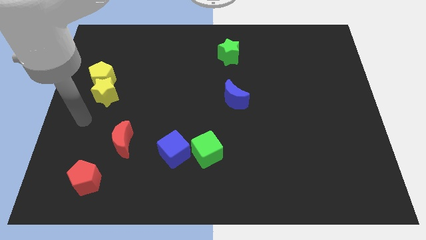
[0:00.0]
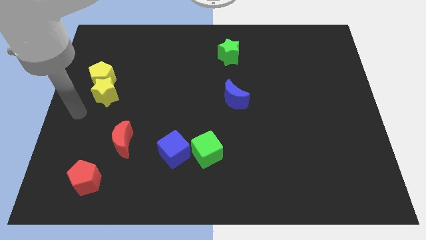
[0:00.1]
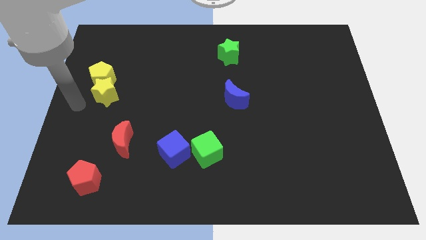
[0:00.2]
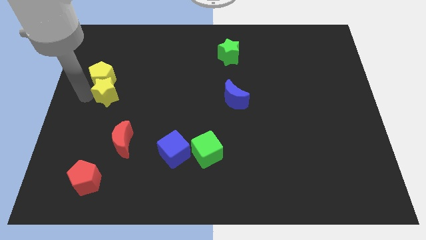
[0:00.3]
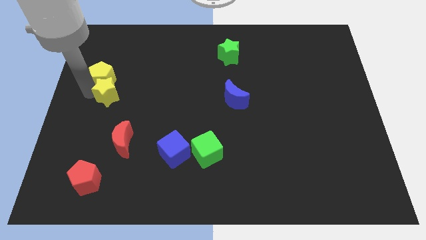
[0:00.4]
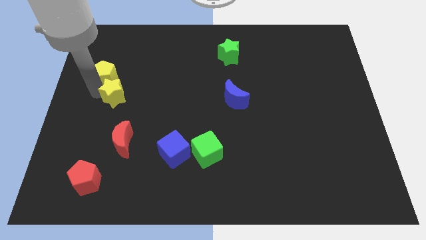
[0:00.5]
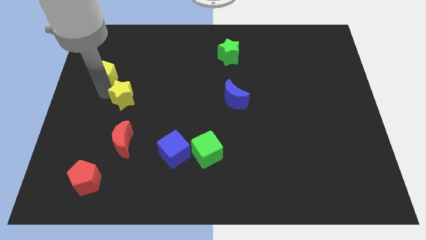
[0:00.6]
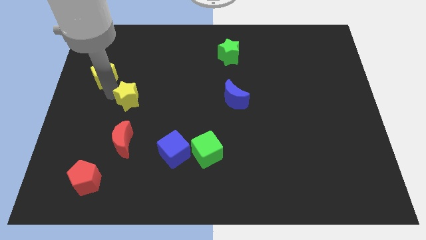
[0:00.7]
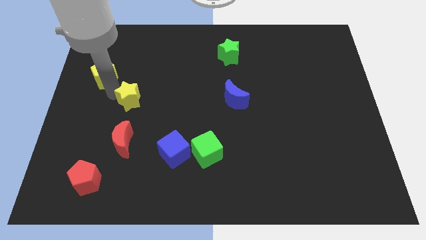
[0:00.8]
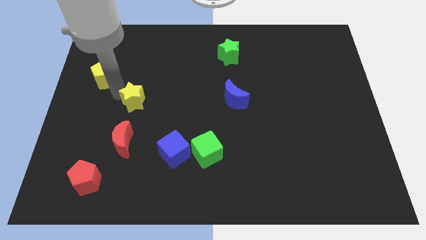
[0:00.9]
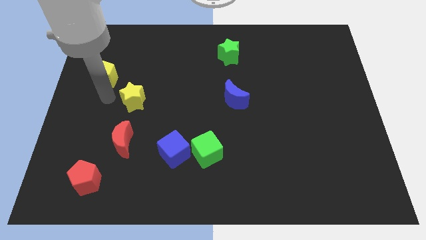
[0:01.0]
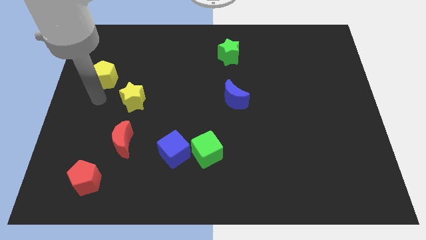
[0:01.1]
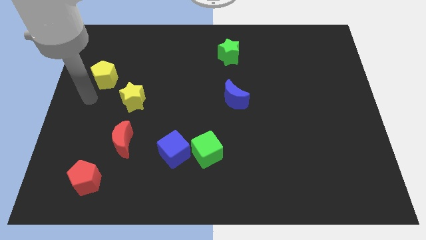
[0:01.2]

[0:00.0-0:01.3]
separate the yellow star from the yellow pentagon

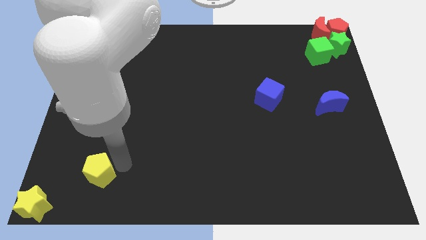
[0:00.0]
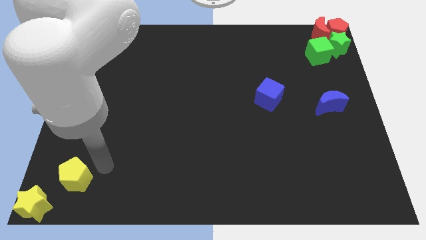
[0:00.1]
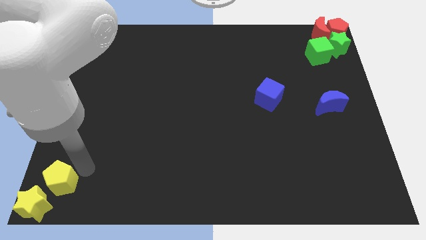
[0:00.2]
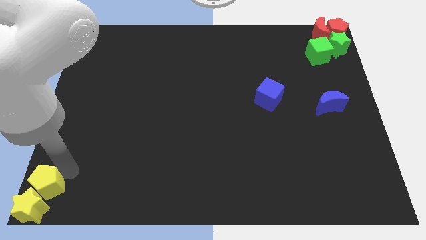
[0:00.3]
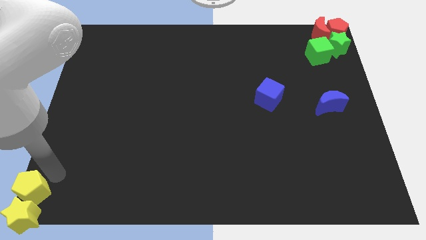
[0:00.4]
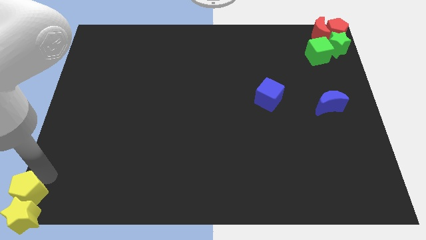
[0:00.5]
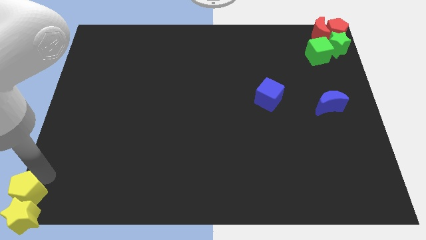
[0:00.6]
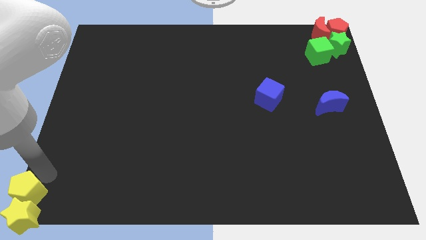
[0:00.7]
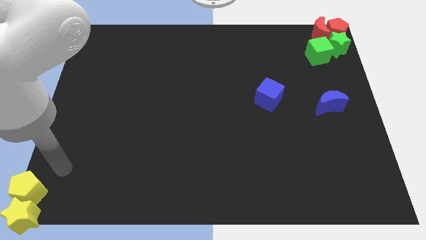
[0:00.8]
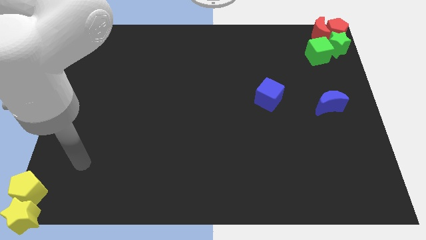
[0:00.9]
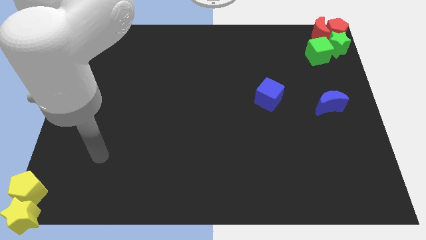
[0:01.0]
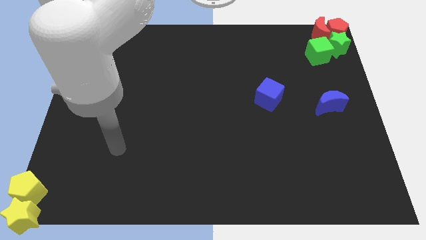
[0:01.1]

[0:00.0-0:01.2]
push the yellow pentagon into the yellow star

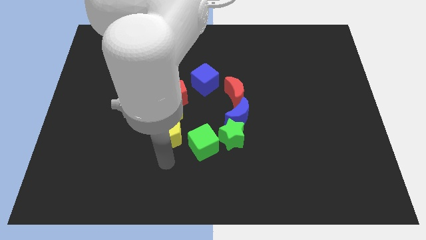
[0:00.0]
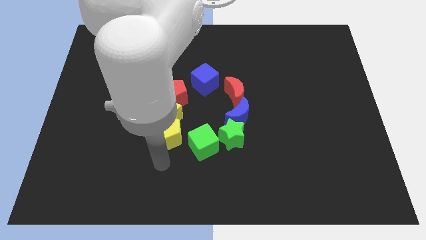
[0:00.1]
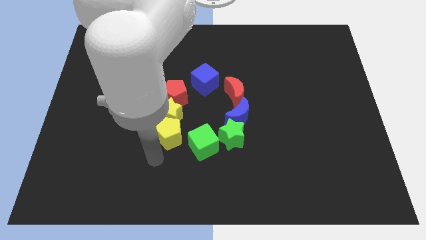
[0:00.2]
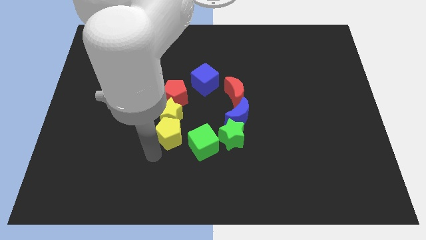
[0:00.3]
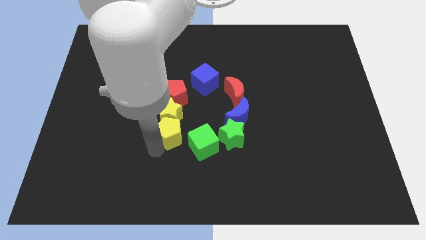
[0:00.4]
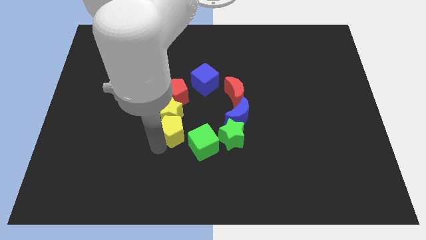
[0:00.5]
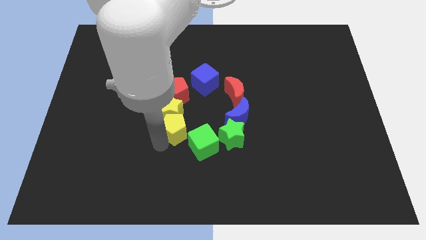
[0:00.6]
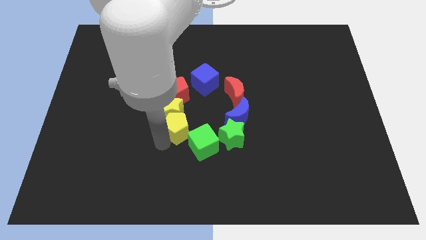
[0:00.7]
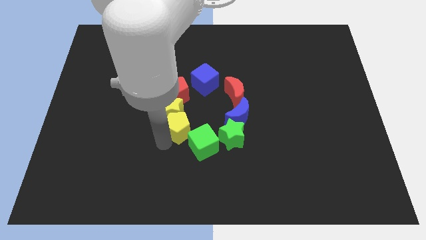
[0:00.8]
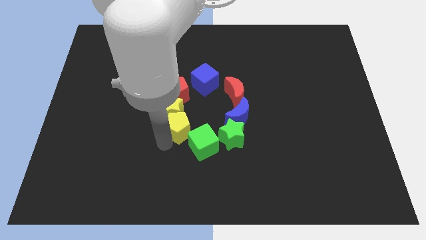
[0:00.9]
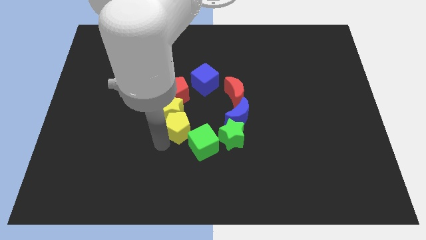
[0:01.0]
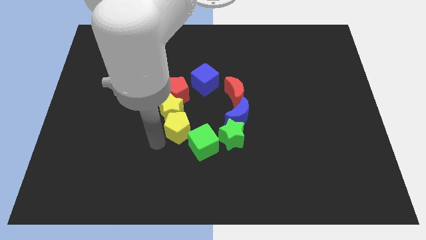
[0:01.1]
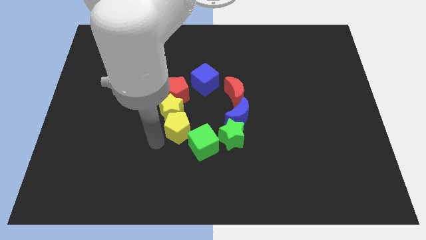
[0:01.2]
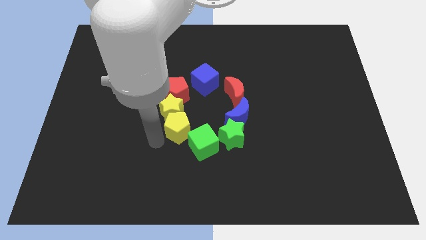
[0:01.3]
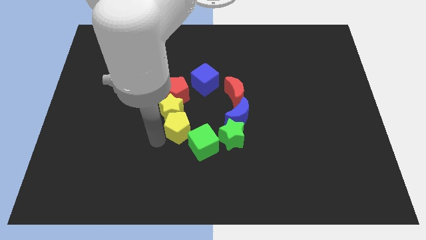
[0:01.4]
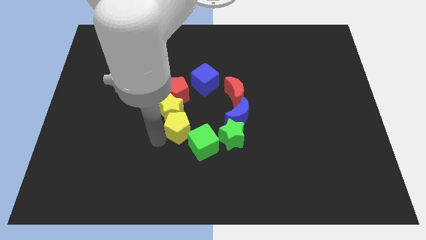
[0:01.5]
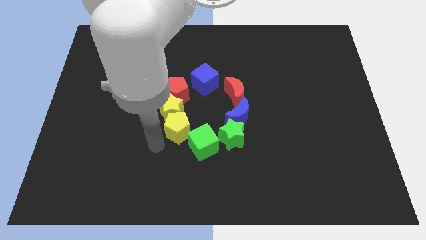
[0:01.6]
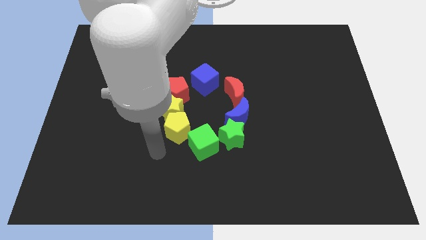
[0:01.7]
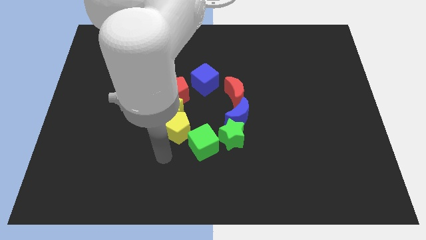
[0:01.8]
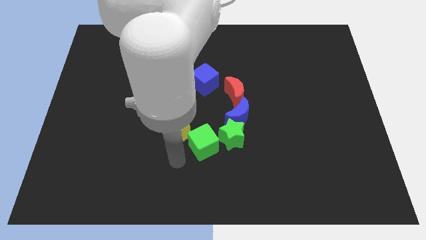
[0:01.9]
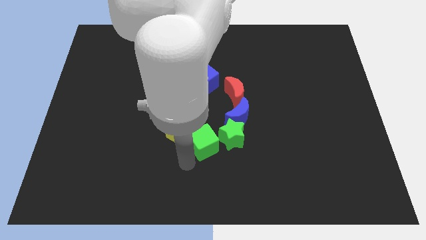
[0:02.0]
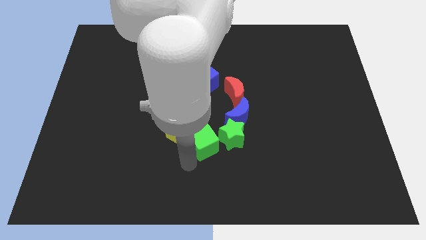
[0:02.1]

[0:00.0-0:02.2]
make a circle with group of blocks

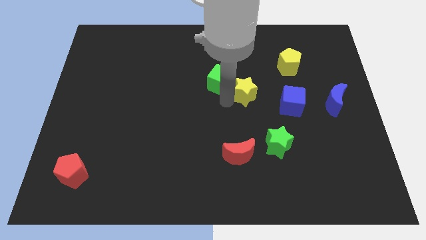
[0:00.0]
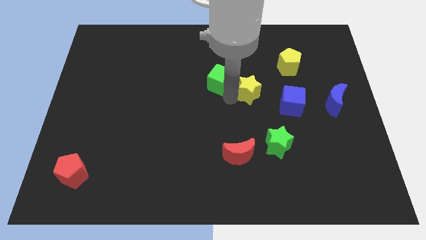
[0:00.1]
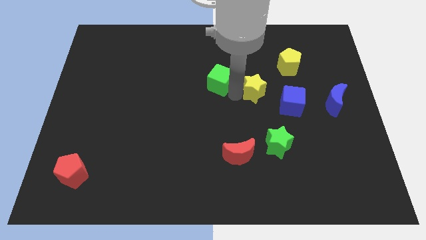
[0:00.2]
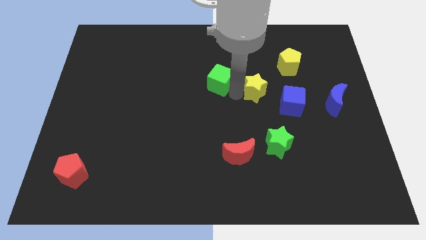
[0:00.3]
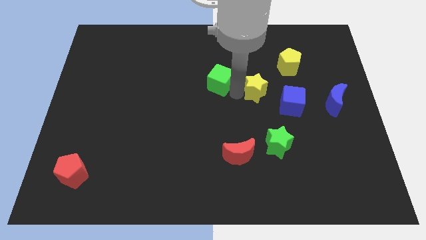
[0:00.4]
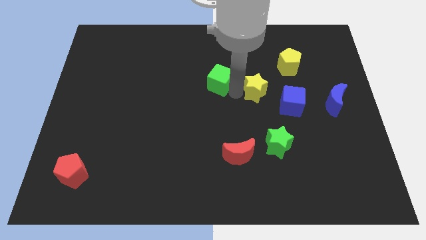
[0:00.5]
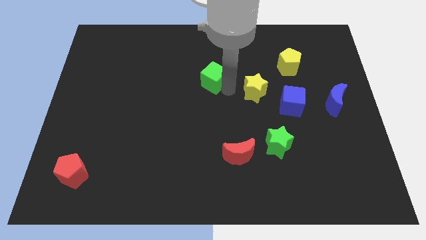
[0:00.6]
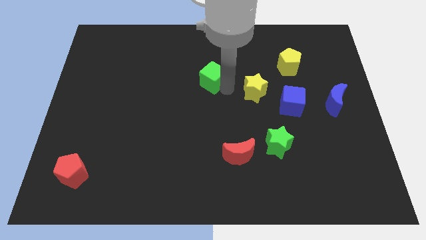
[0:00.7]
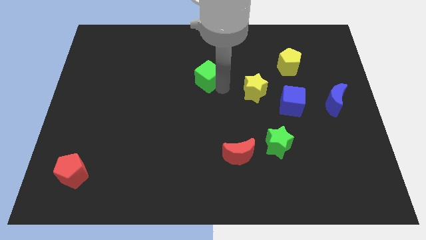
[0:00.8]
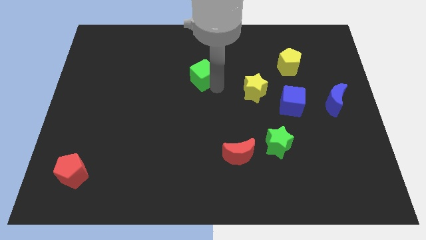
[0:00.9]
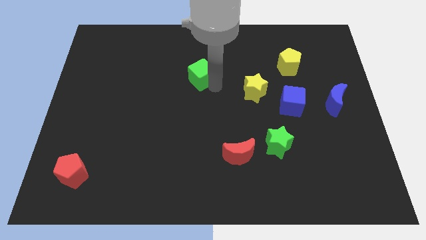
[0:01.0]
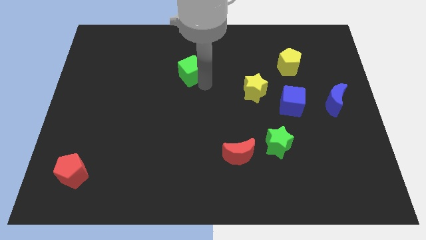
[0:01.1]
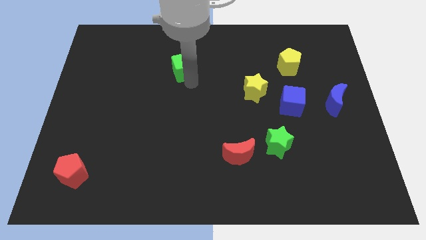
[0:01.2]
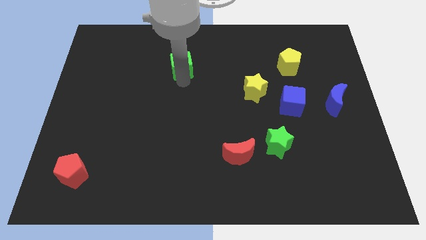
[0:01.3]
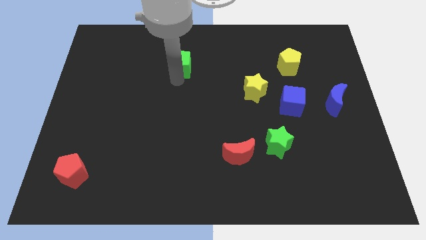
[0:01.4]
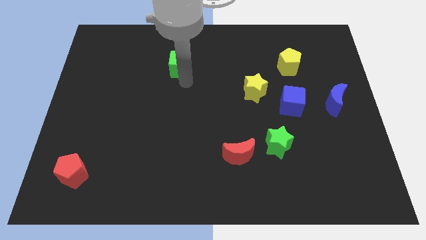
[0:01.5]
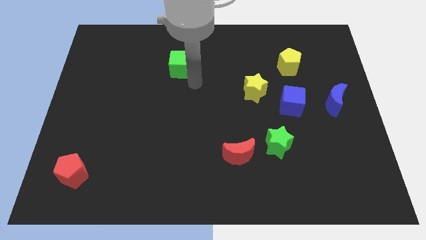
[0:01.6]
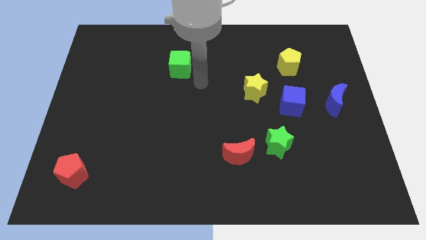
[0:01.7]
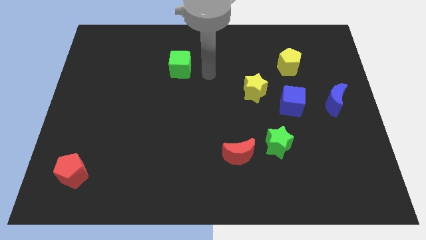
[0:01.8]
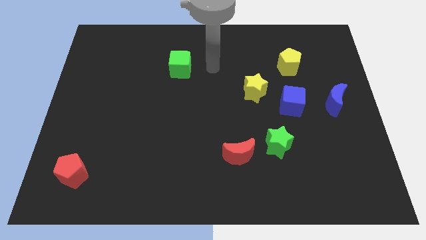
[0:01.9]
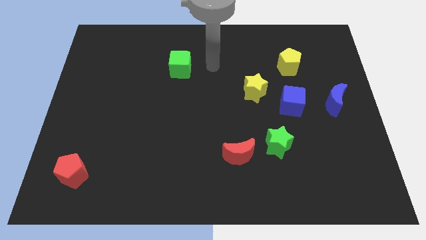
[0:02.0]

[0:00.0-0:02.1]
separate green cube from yellow star

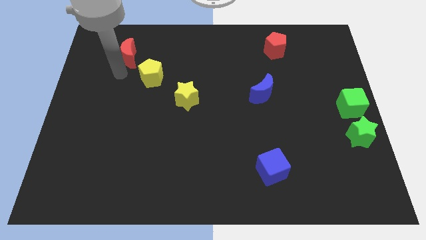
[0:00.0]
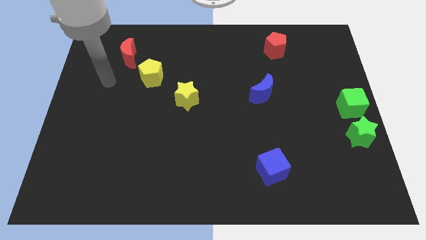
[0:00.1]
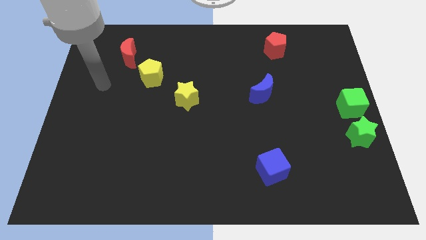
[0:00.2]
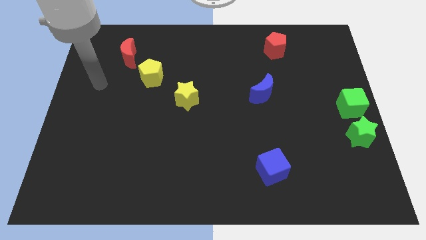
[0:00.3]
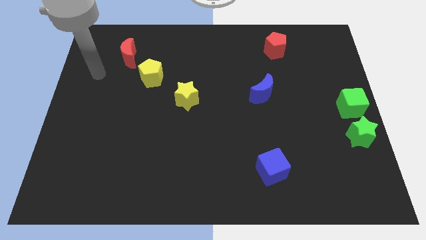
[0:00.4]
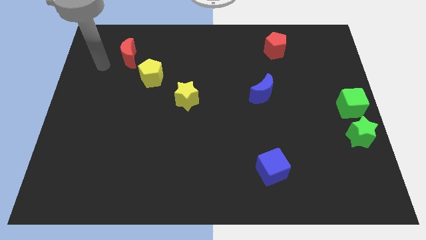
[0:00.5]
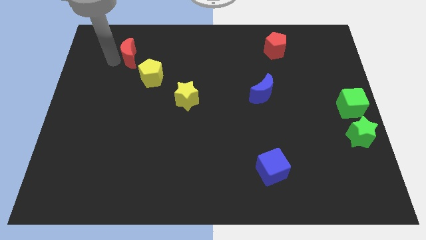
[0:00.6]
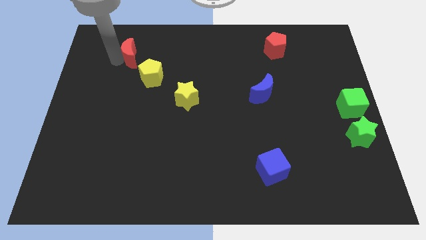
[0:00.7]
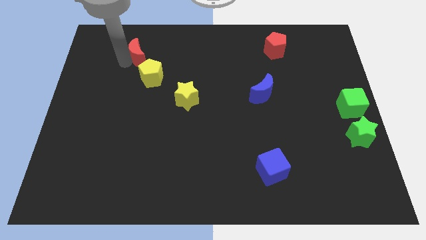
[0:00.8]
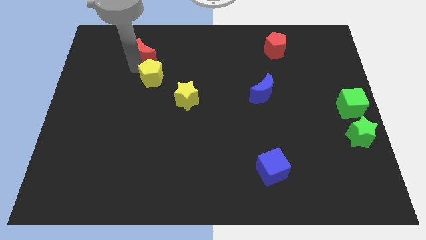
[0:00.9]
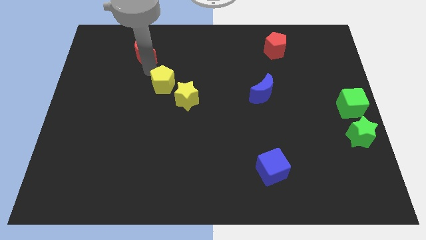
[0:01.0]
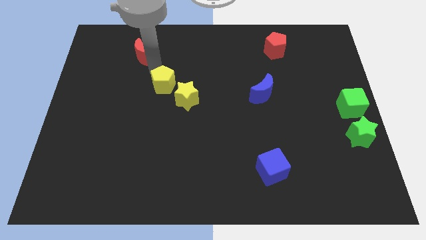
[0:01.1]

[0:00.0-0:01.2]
place your arm in between the red moon and yellow pentagon

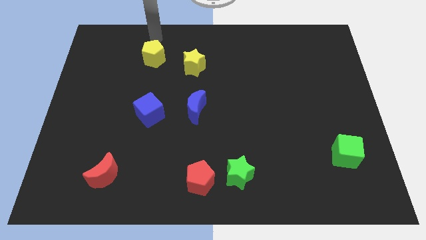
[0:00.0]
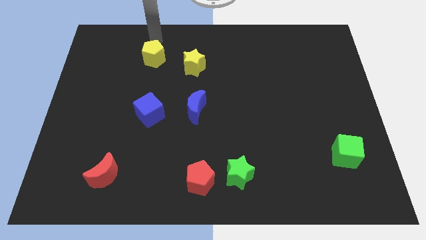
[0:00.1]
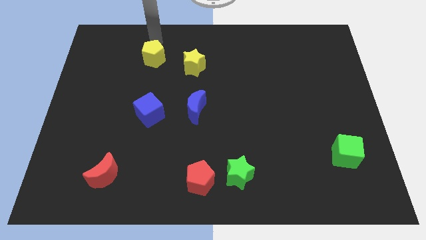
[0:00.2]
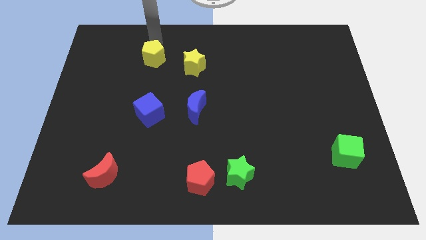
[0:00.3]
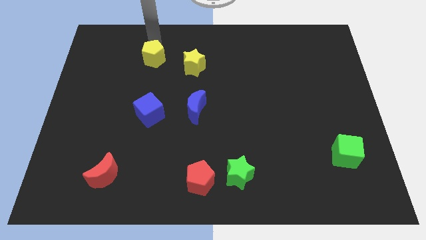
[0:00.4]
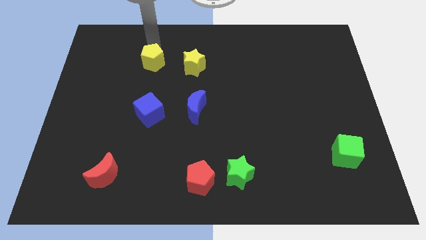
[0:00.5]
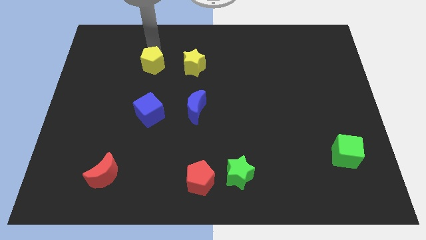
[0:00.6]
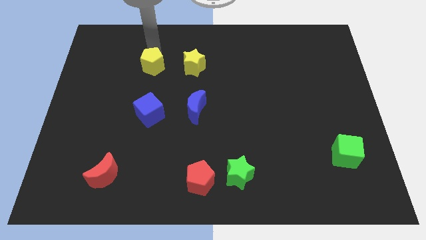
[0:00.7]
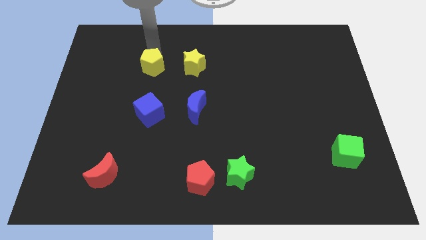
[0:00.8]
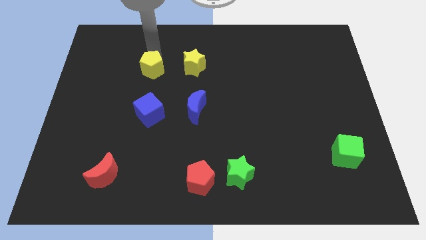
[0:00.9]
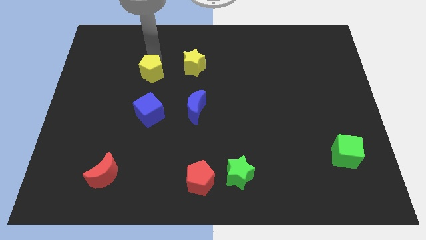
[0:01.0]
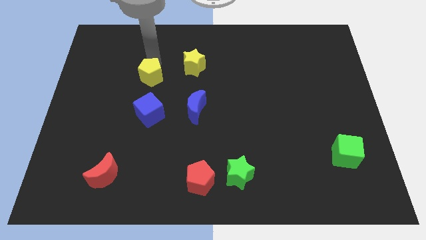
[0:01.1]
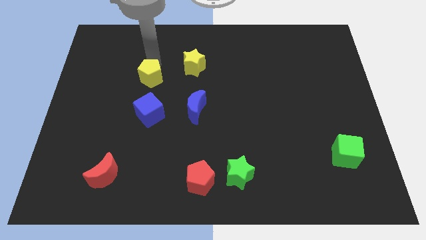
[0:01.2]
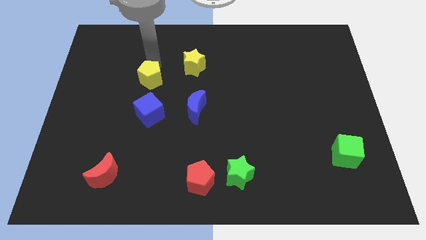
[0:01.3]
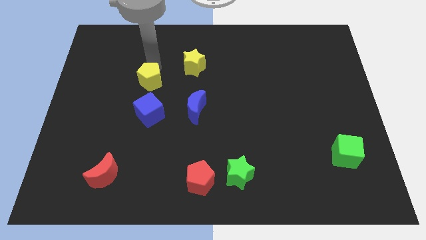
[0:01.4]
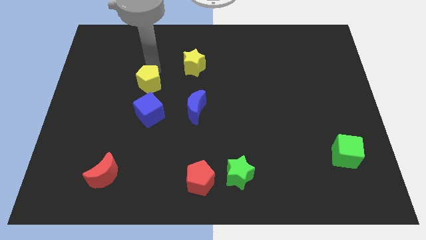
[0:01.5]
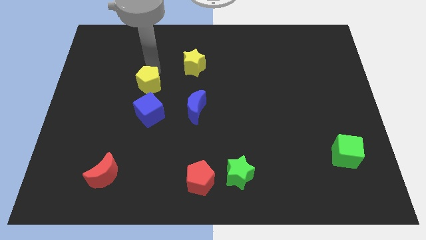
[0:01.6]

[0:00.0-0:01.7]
push the yellow pentagon slightly towards the blue cube
